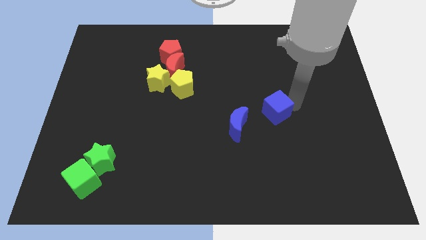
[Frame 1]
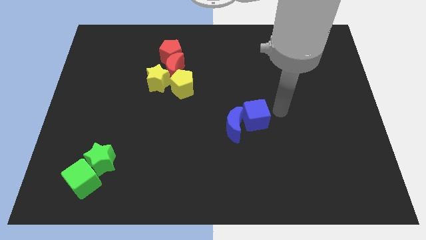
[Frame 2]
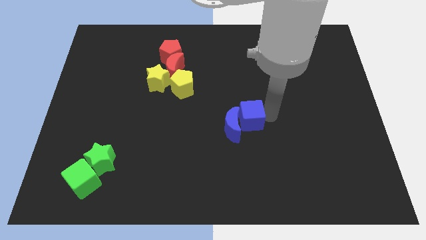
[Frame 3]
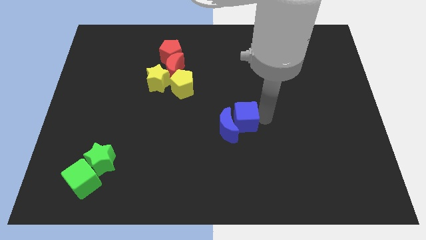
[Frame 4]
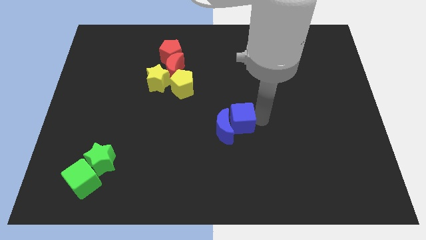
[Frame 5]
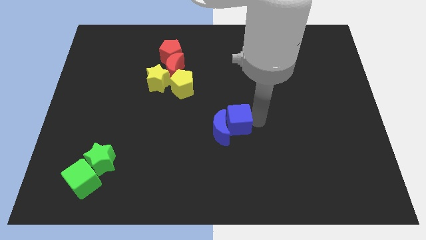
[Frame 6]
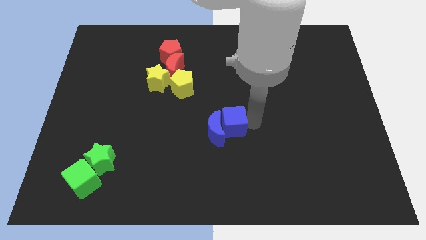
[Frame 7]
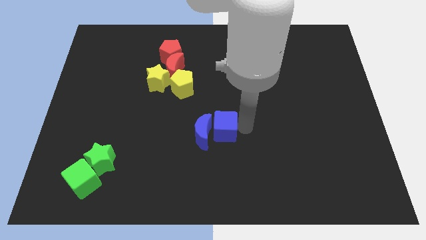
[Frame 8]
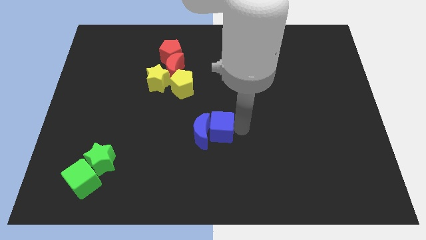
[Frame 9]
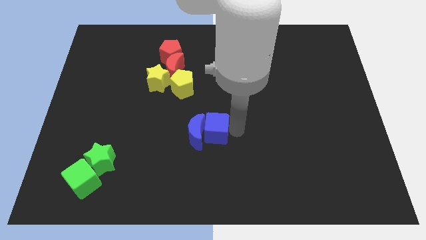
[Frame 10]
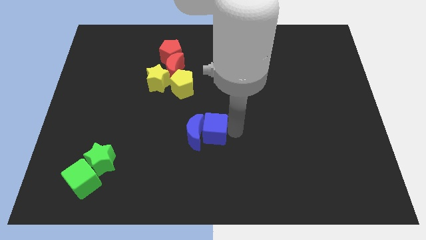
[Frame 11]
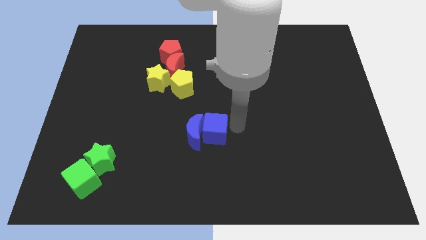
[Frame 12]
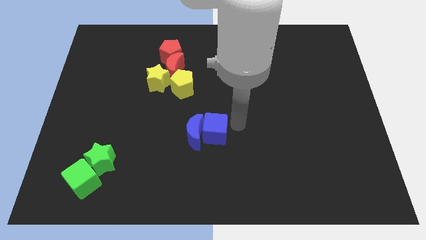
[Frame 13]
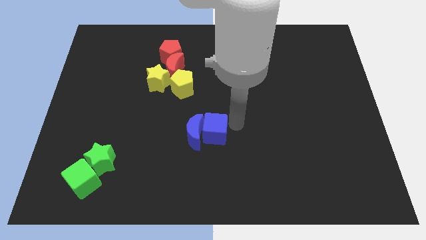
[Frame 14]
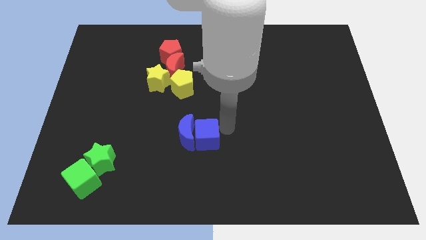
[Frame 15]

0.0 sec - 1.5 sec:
push blue cube into blue crescent

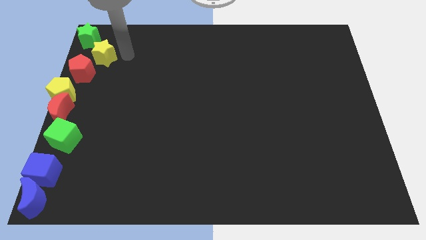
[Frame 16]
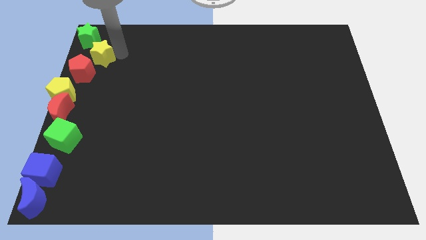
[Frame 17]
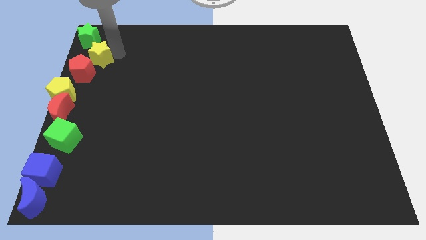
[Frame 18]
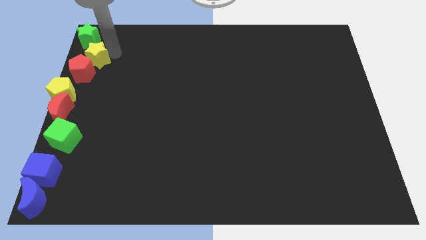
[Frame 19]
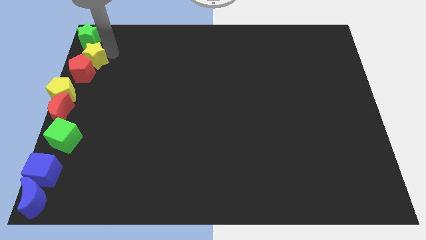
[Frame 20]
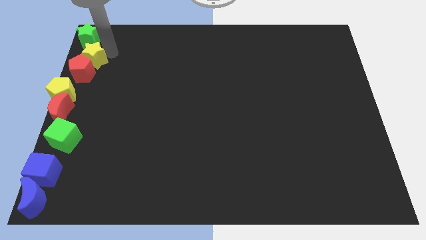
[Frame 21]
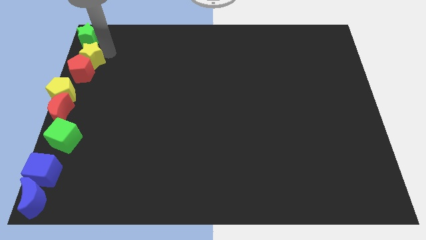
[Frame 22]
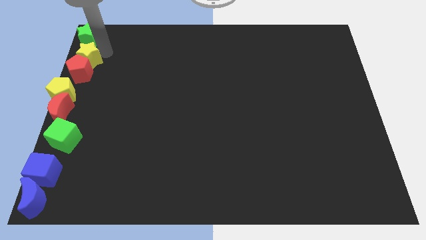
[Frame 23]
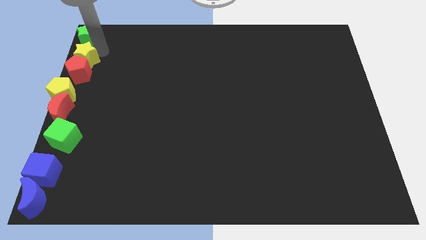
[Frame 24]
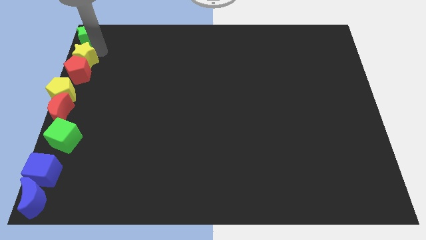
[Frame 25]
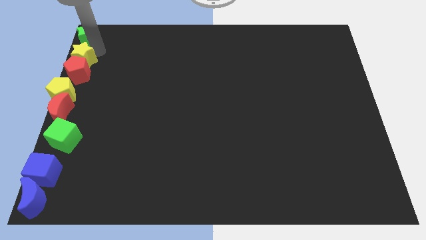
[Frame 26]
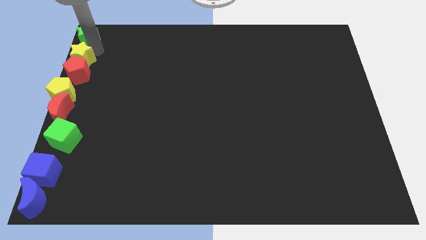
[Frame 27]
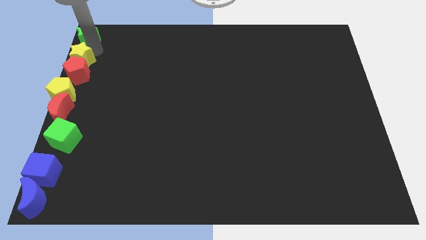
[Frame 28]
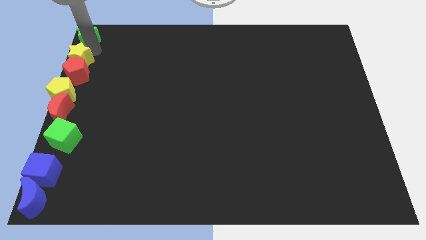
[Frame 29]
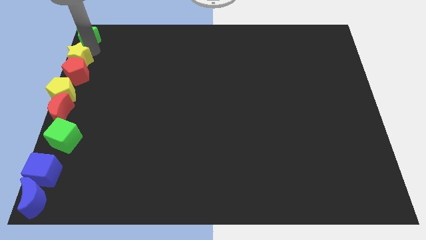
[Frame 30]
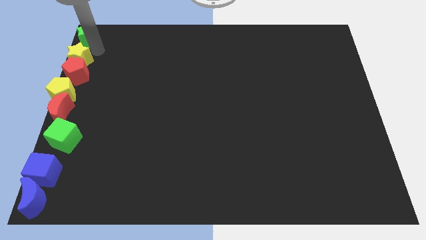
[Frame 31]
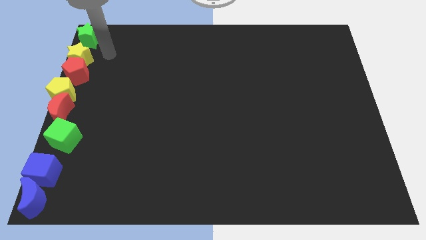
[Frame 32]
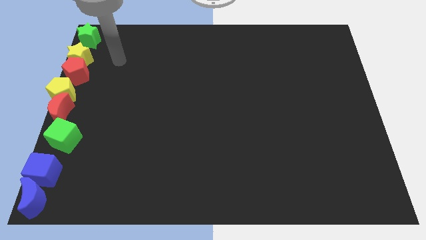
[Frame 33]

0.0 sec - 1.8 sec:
put the yellow star in between the green star and the red pentagon

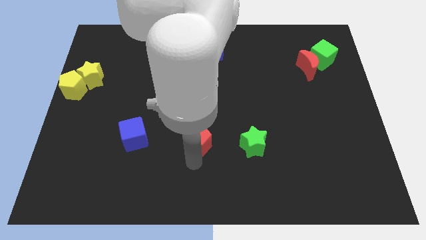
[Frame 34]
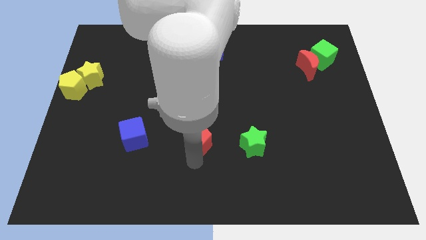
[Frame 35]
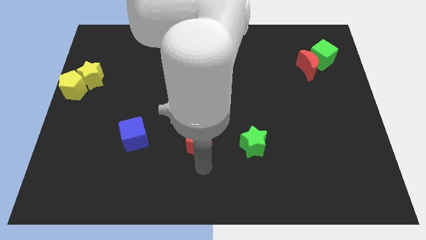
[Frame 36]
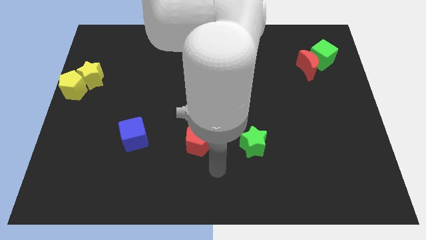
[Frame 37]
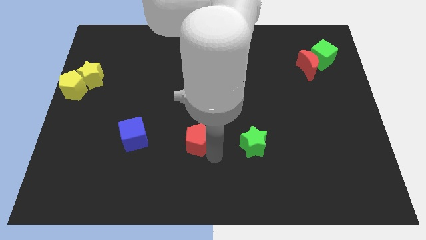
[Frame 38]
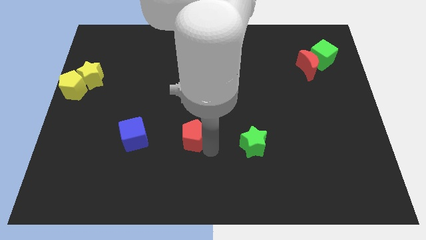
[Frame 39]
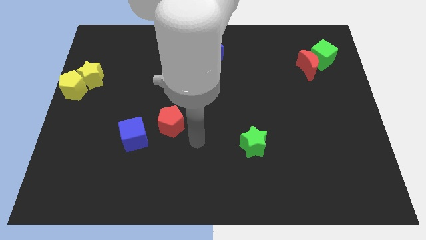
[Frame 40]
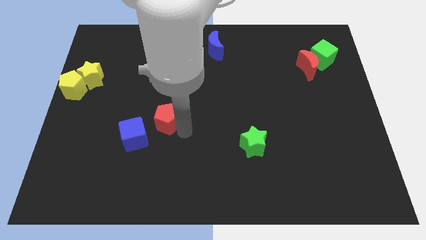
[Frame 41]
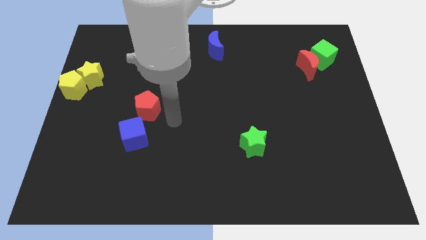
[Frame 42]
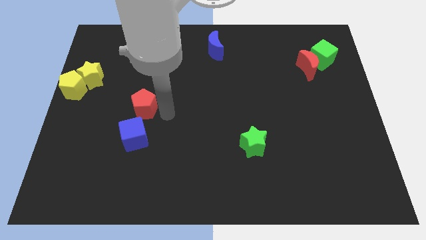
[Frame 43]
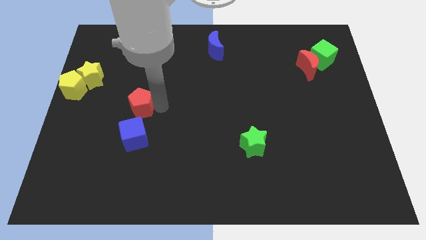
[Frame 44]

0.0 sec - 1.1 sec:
move the red pentagon towards the top side of the blue cube

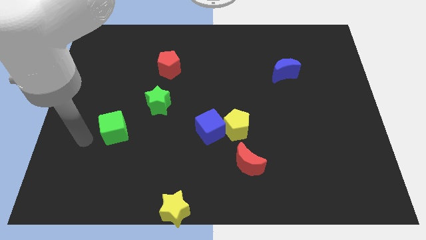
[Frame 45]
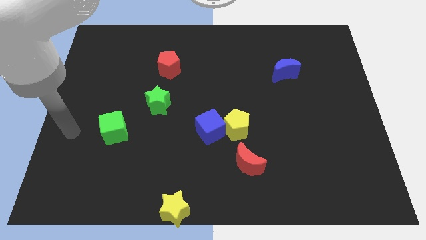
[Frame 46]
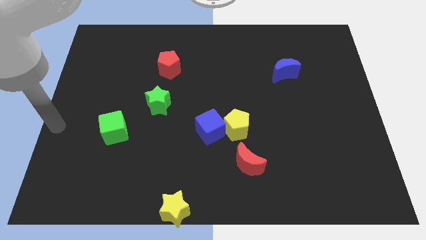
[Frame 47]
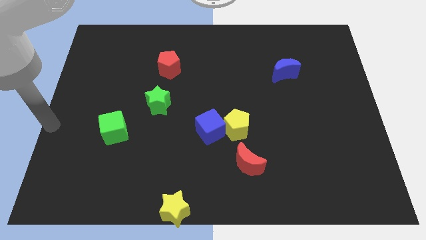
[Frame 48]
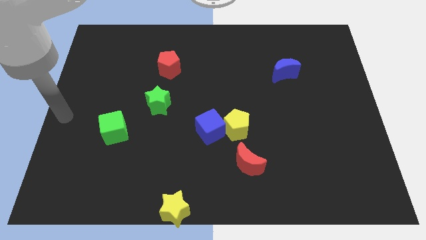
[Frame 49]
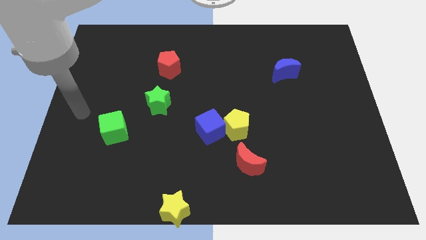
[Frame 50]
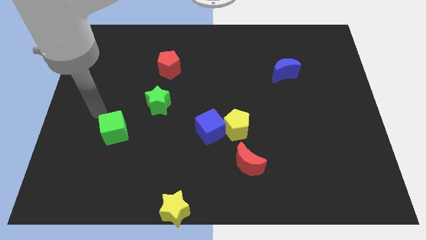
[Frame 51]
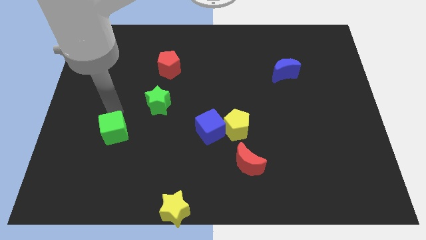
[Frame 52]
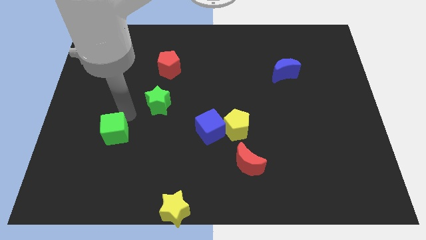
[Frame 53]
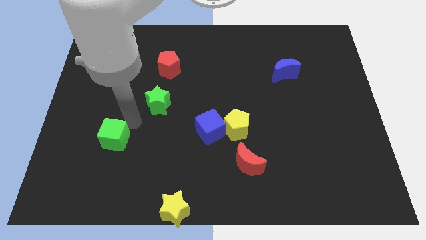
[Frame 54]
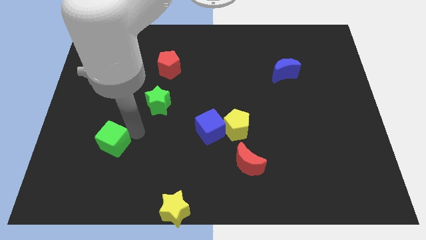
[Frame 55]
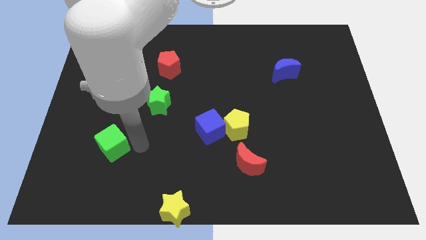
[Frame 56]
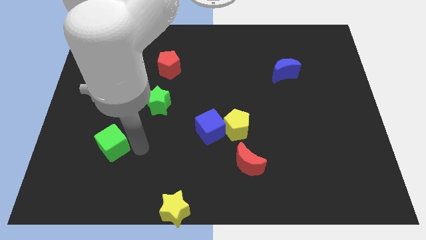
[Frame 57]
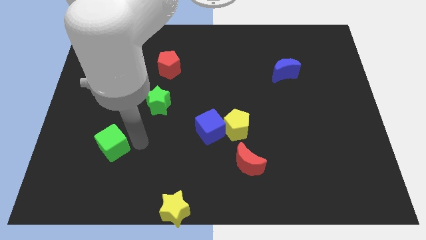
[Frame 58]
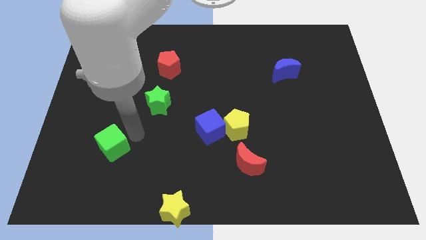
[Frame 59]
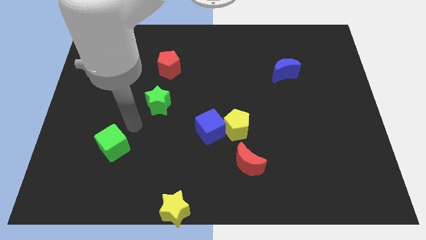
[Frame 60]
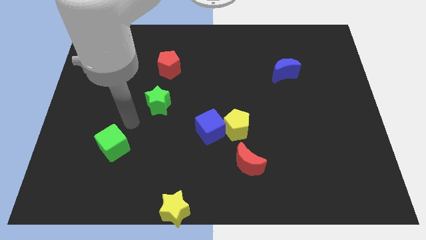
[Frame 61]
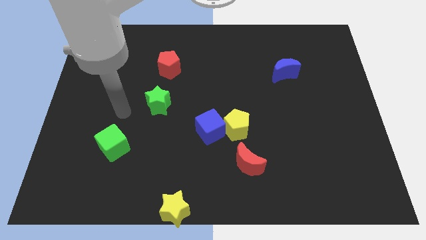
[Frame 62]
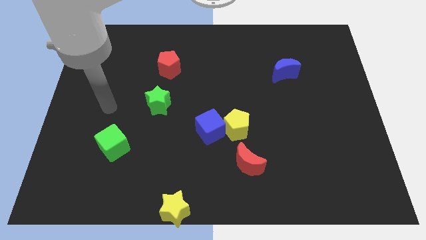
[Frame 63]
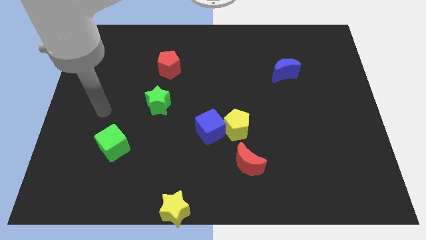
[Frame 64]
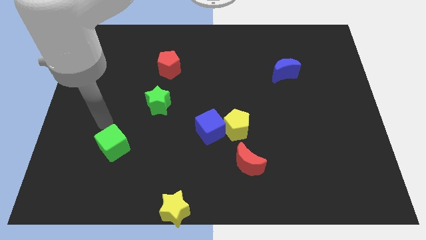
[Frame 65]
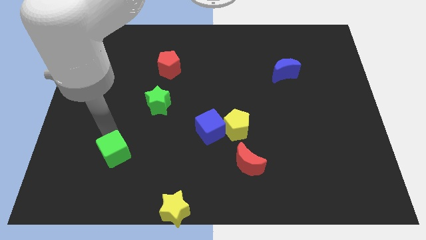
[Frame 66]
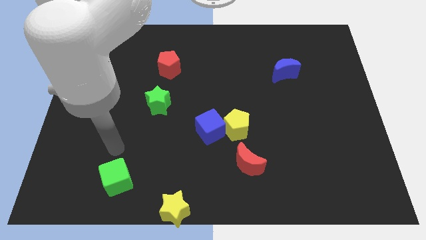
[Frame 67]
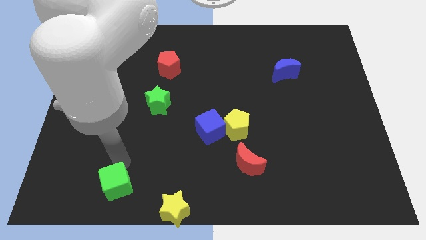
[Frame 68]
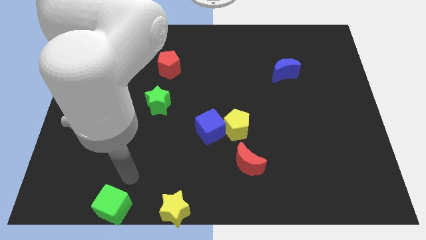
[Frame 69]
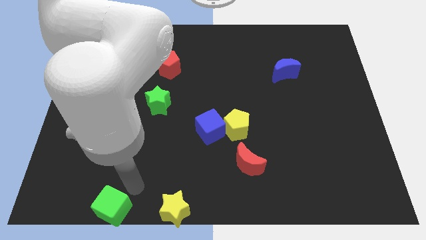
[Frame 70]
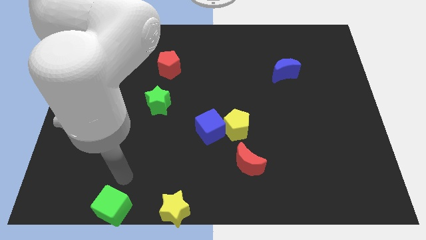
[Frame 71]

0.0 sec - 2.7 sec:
move the green cube to the left of the yellow star

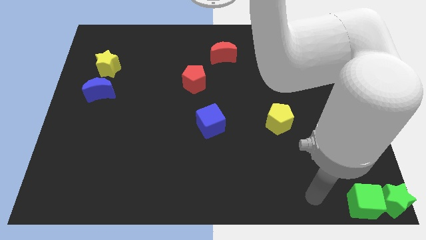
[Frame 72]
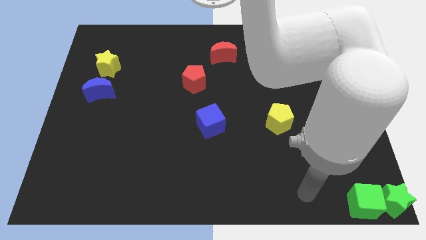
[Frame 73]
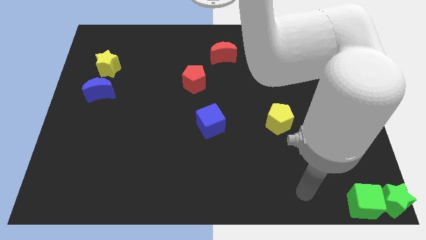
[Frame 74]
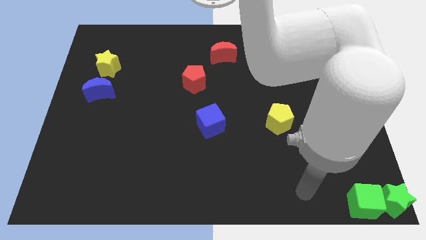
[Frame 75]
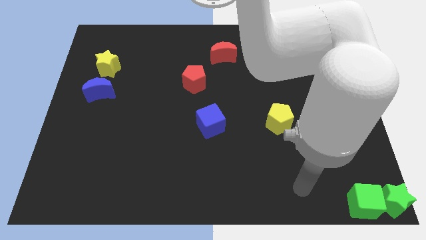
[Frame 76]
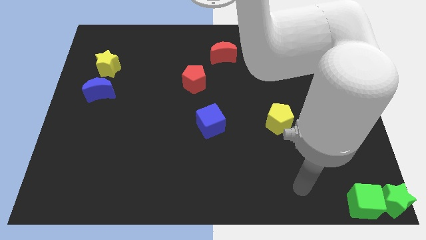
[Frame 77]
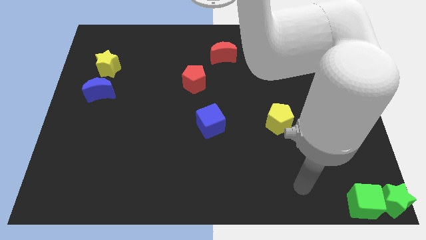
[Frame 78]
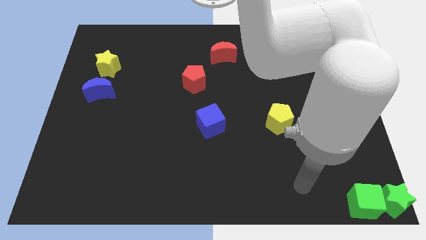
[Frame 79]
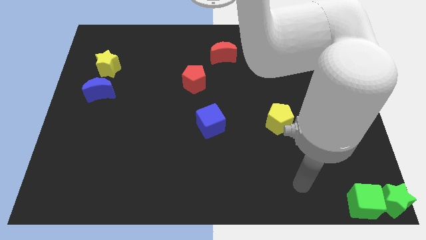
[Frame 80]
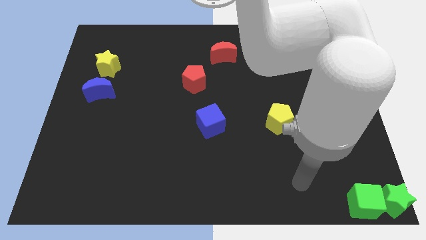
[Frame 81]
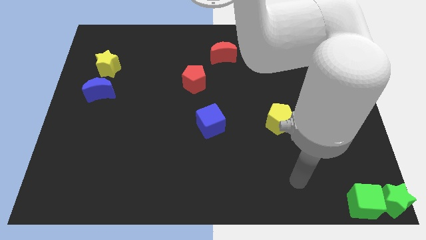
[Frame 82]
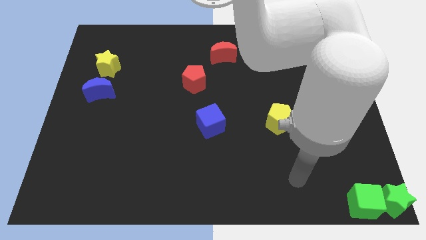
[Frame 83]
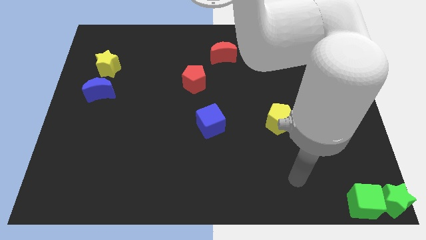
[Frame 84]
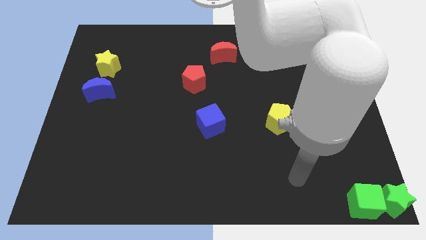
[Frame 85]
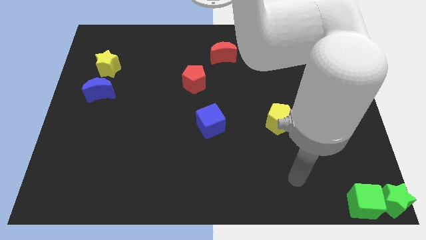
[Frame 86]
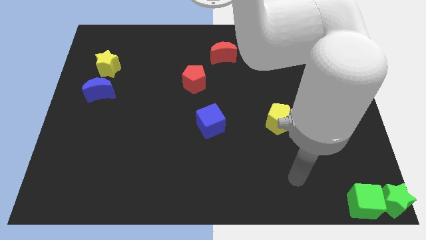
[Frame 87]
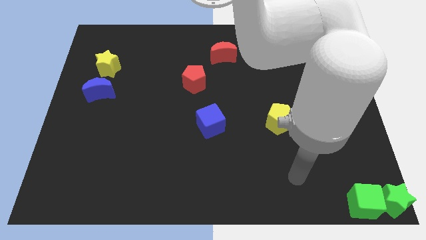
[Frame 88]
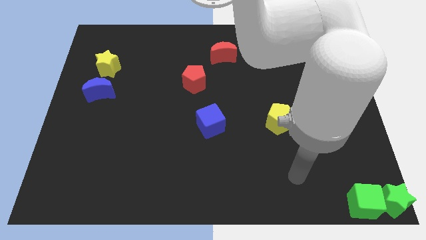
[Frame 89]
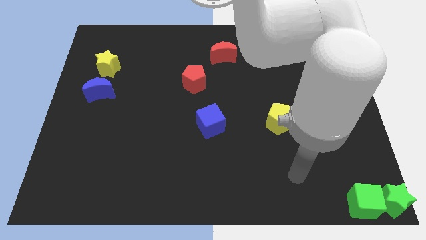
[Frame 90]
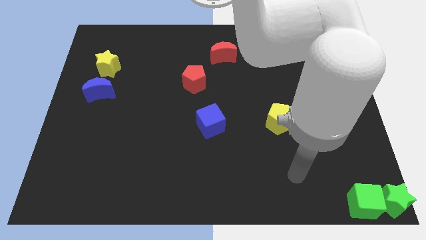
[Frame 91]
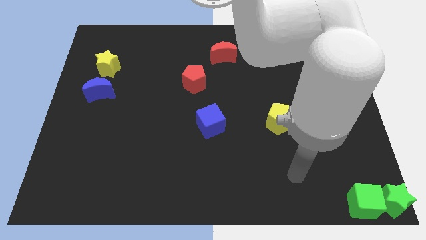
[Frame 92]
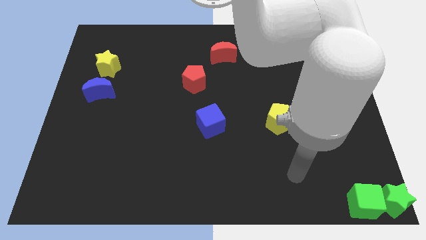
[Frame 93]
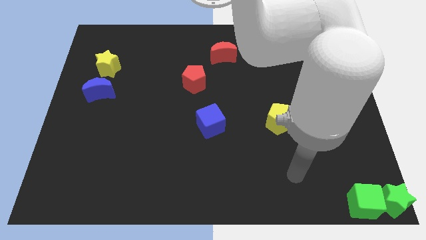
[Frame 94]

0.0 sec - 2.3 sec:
move your arm slightly away from the green cube
